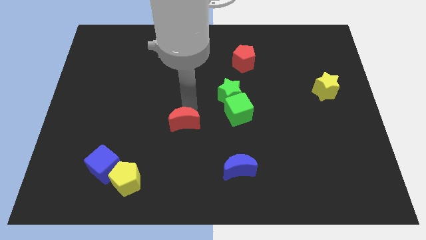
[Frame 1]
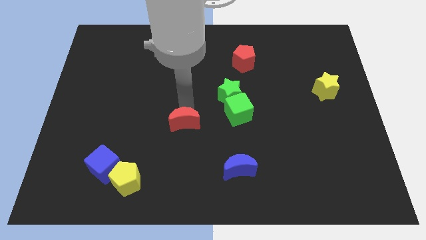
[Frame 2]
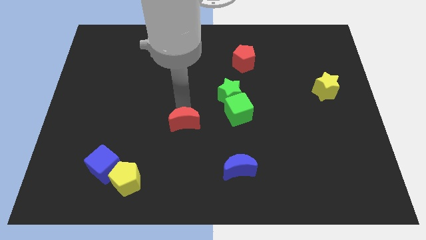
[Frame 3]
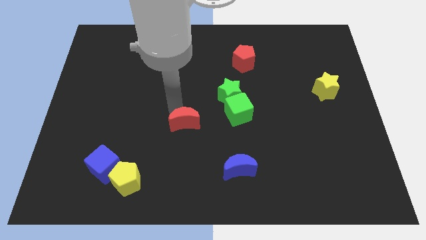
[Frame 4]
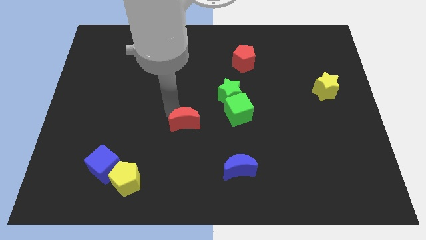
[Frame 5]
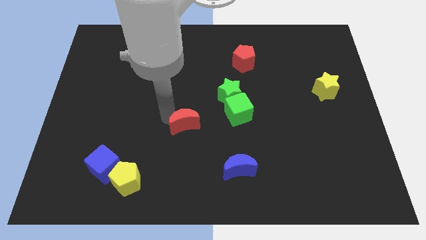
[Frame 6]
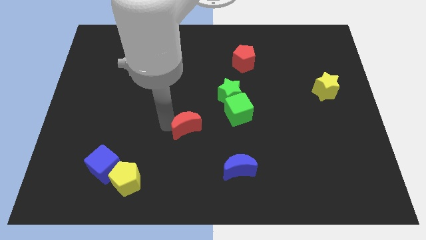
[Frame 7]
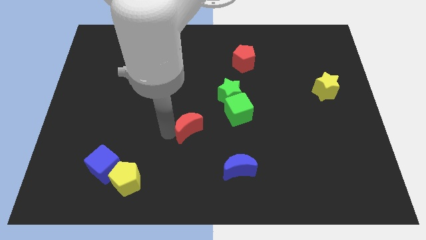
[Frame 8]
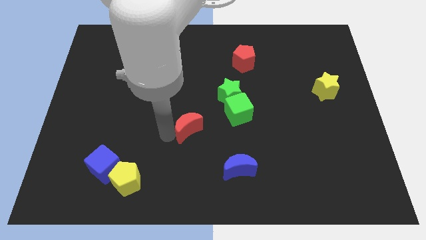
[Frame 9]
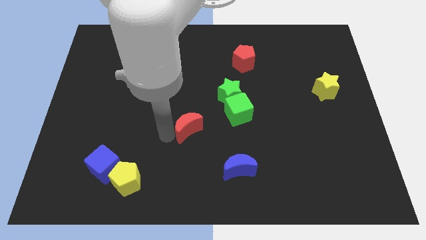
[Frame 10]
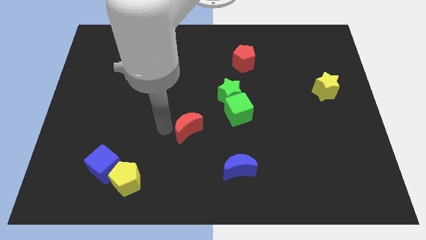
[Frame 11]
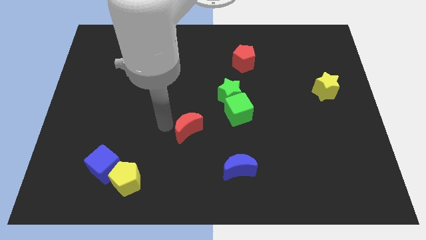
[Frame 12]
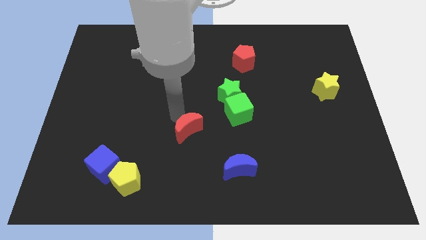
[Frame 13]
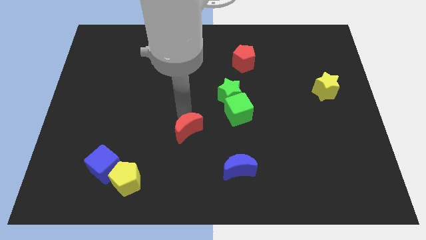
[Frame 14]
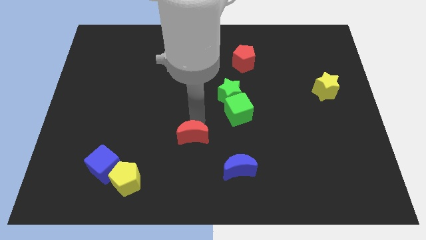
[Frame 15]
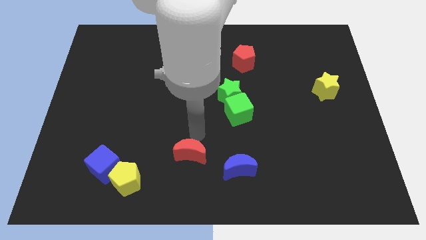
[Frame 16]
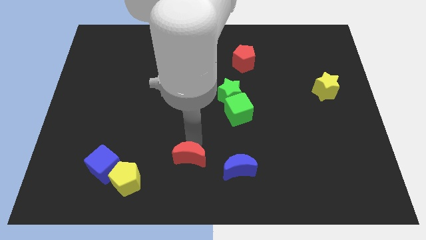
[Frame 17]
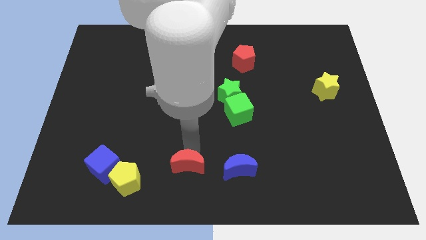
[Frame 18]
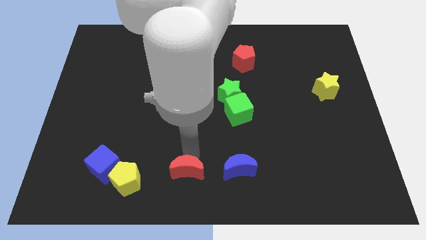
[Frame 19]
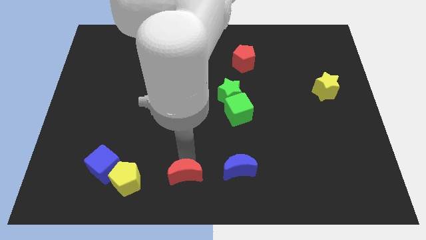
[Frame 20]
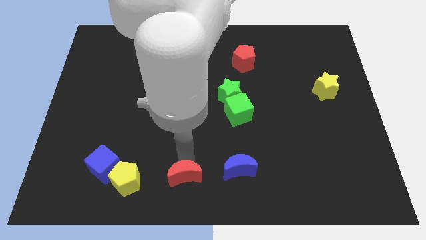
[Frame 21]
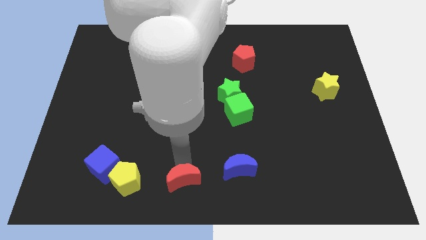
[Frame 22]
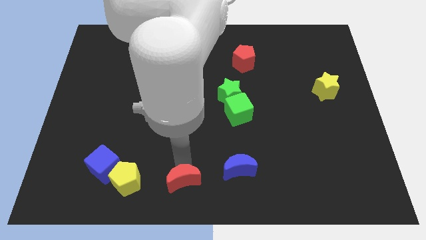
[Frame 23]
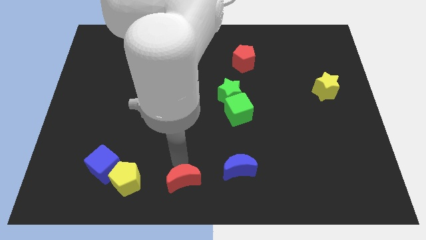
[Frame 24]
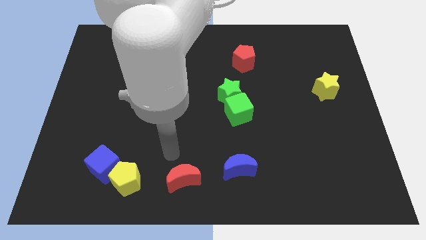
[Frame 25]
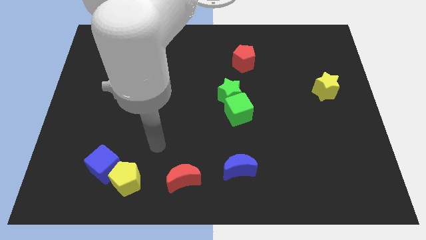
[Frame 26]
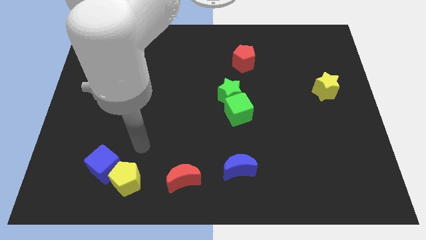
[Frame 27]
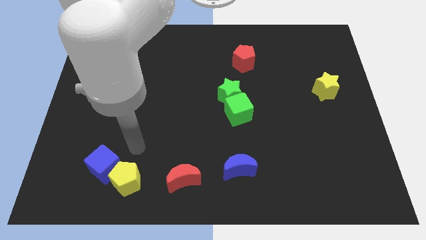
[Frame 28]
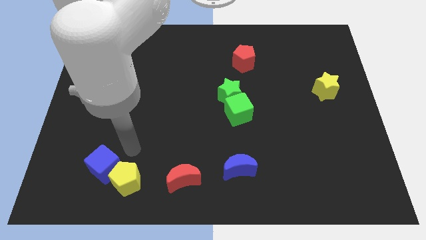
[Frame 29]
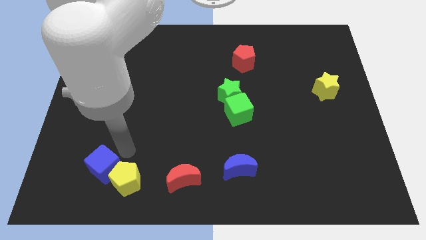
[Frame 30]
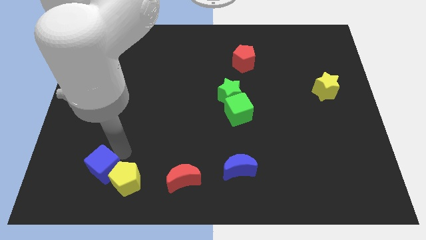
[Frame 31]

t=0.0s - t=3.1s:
move red moon towards bottom center

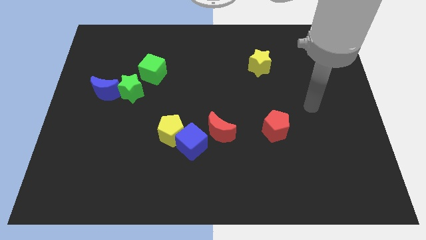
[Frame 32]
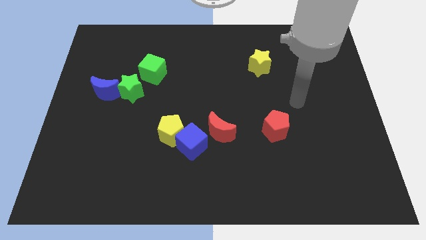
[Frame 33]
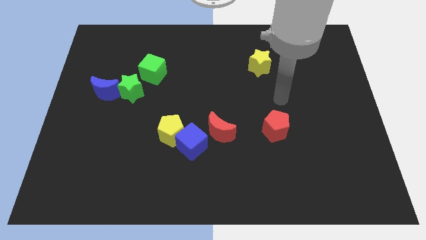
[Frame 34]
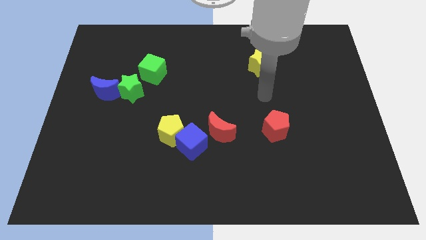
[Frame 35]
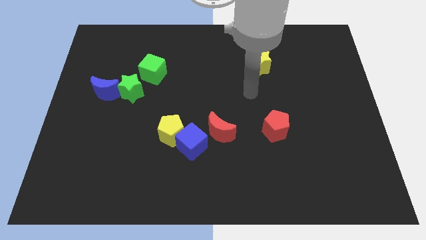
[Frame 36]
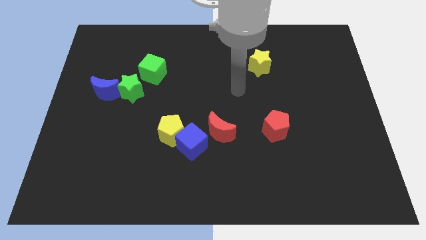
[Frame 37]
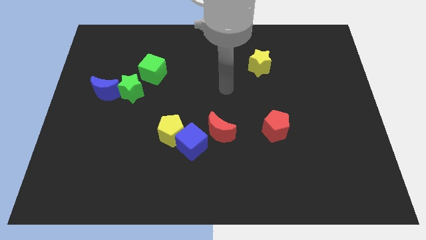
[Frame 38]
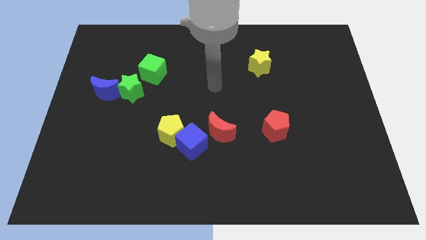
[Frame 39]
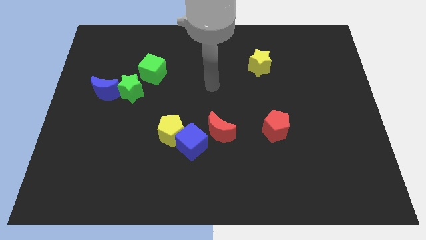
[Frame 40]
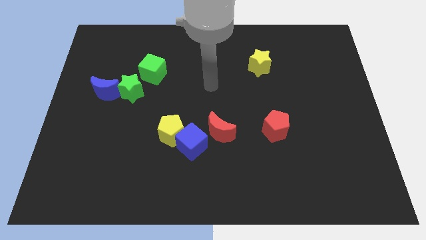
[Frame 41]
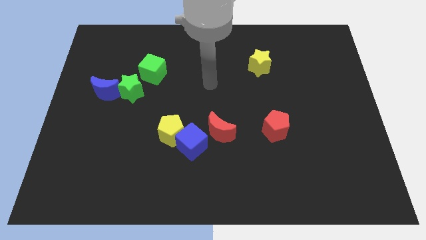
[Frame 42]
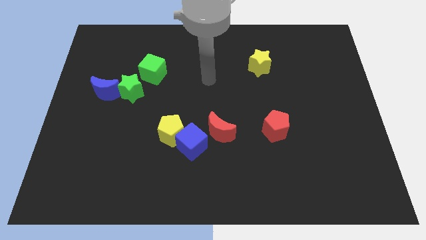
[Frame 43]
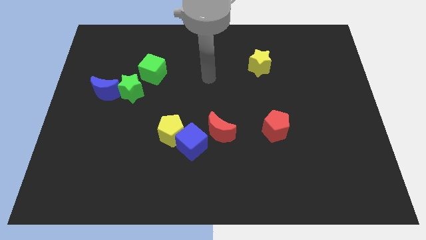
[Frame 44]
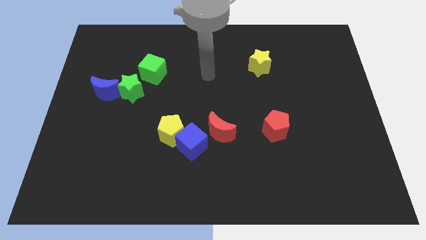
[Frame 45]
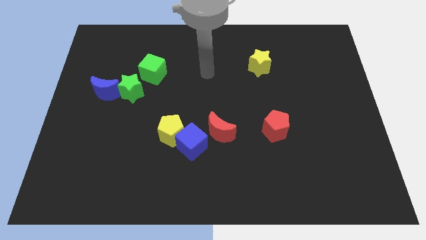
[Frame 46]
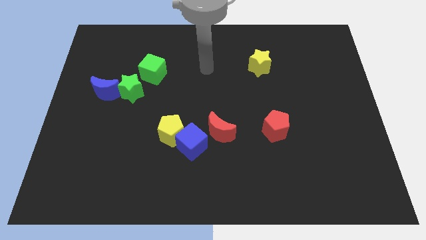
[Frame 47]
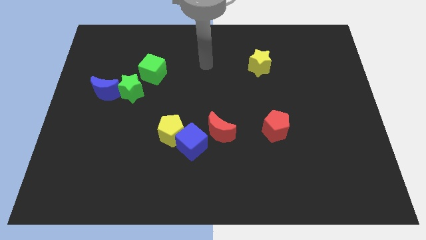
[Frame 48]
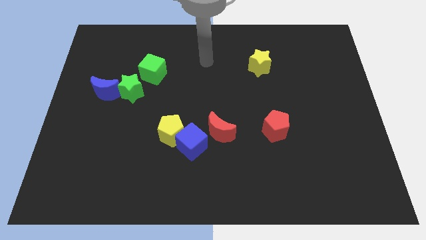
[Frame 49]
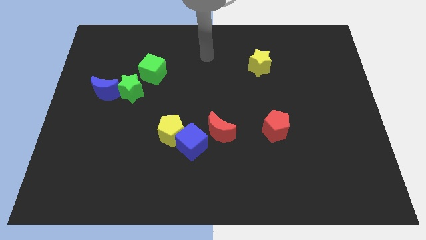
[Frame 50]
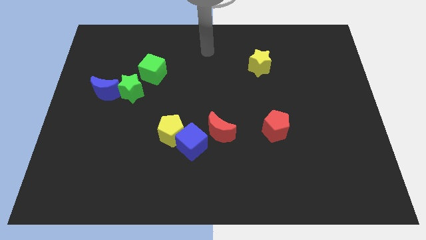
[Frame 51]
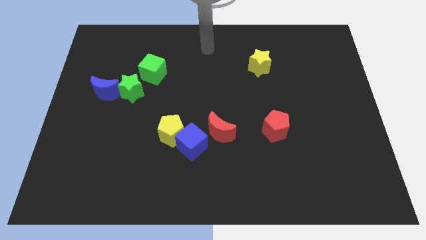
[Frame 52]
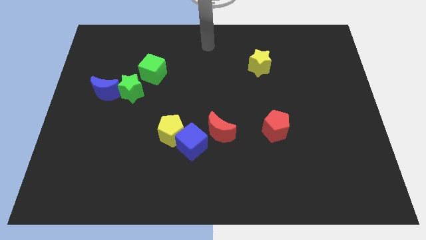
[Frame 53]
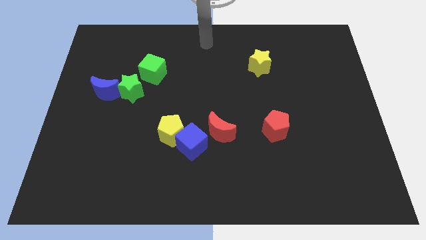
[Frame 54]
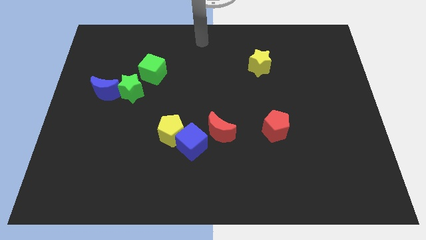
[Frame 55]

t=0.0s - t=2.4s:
point your arm at the top center of the board

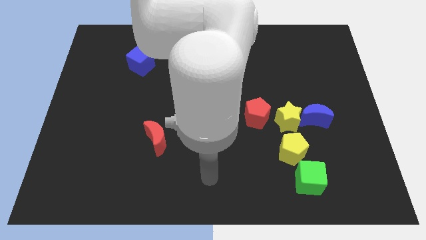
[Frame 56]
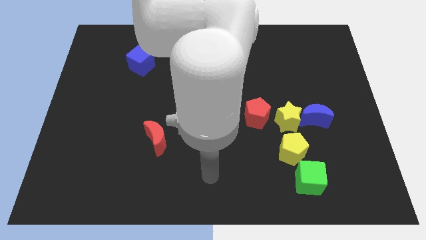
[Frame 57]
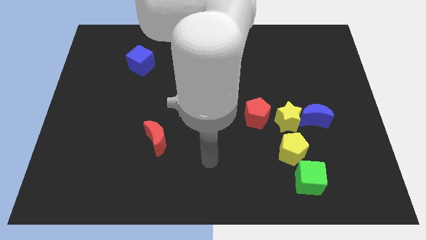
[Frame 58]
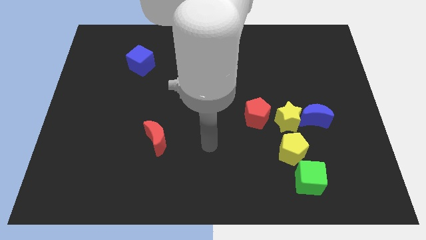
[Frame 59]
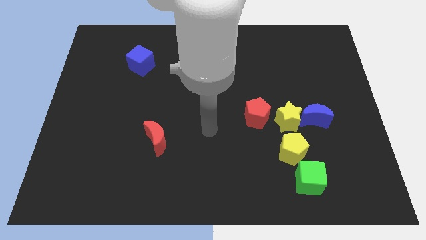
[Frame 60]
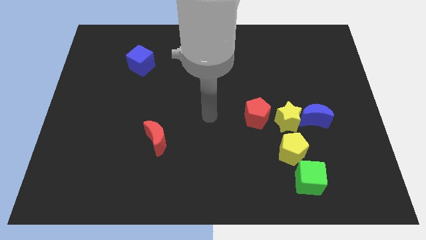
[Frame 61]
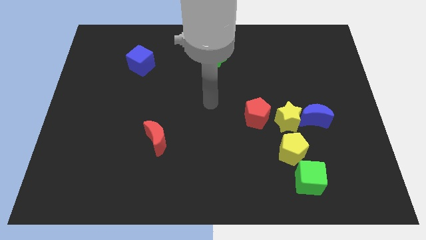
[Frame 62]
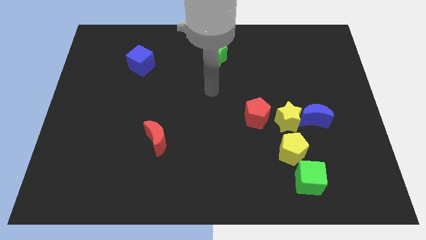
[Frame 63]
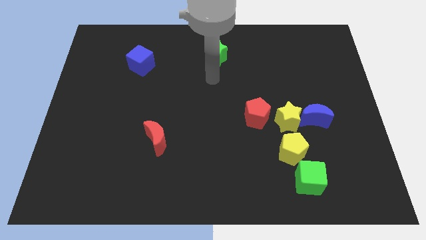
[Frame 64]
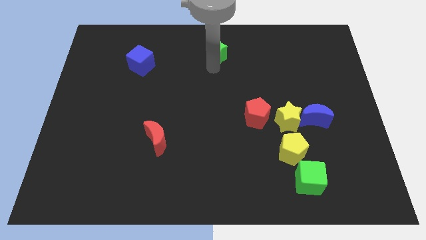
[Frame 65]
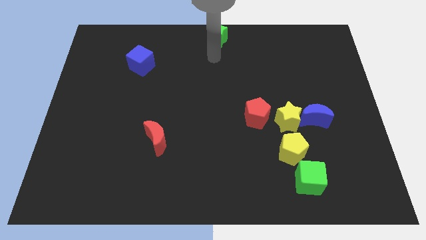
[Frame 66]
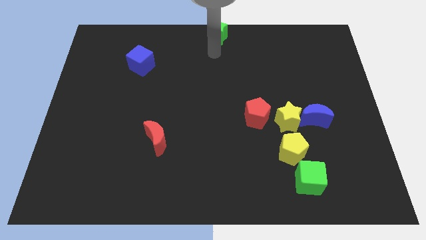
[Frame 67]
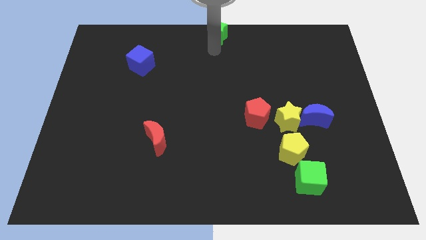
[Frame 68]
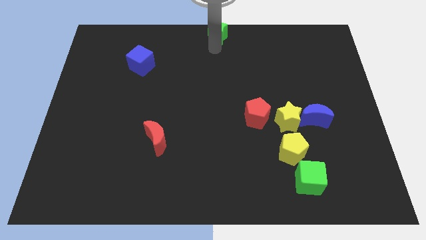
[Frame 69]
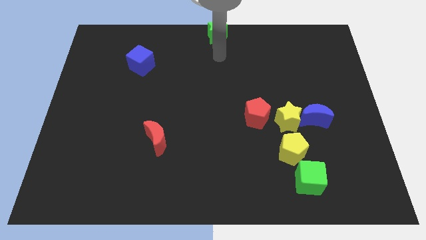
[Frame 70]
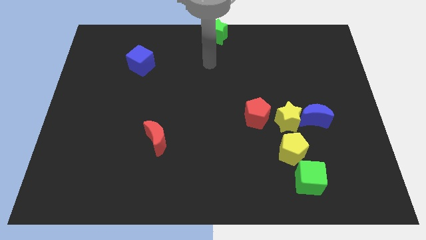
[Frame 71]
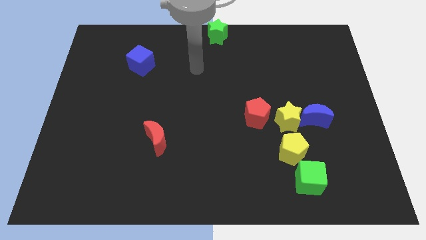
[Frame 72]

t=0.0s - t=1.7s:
place the green star at the top center of the board

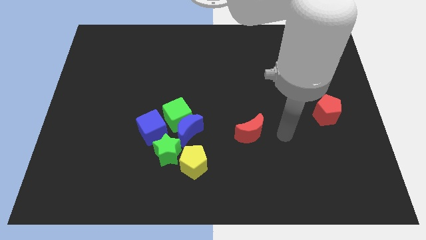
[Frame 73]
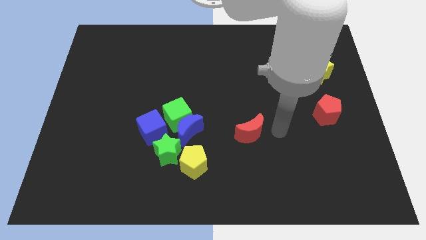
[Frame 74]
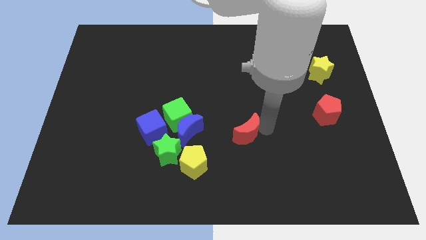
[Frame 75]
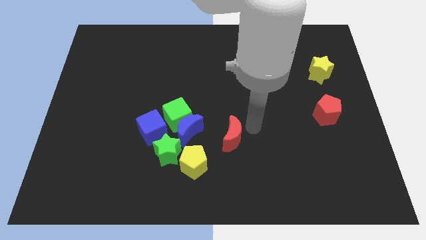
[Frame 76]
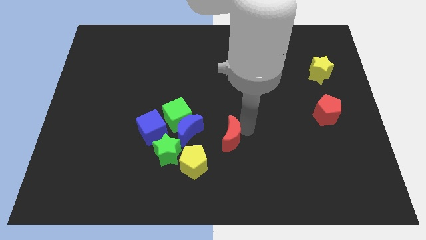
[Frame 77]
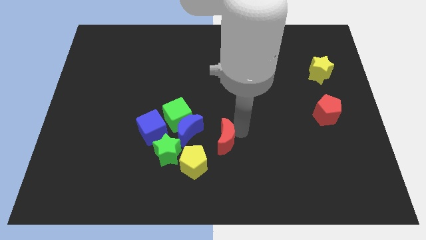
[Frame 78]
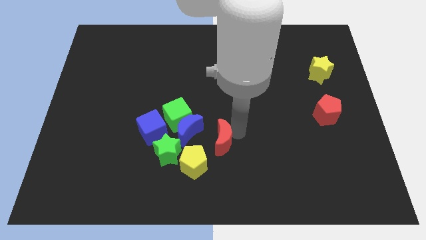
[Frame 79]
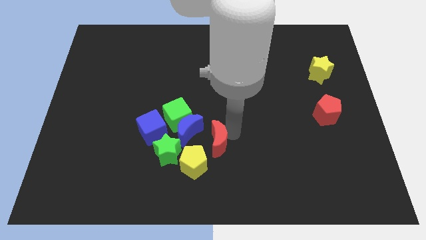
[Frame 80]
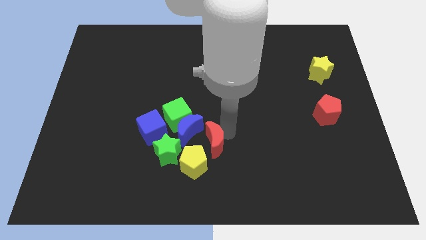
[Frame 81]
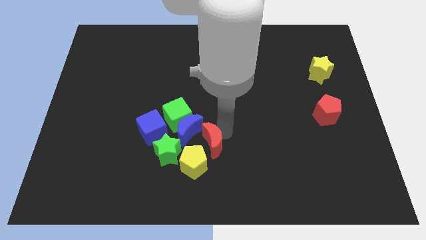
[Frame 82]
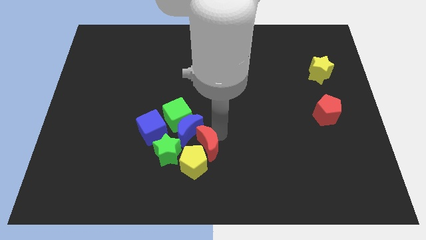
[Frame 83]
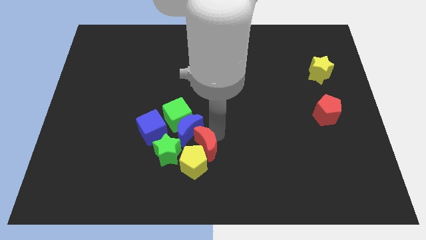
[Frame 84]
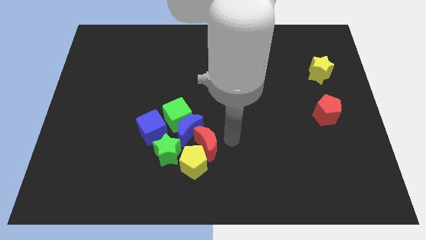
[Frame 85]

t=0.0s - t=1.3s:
push the red crescent to the bottom of blue crescent

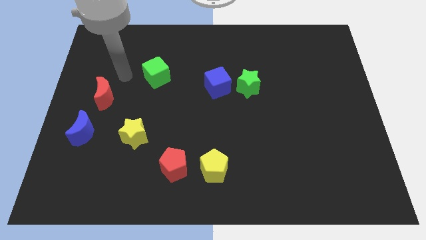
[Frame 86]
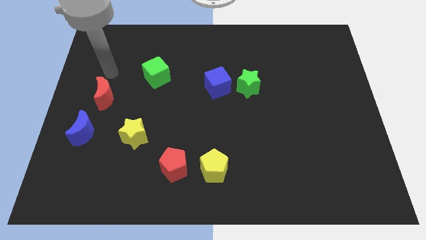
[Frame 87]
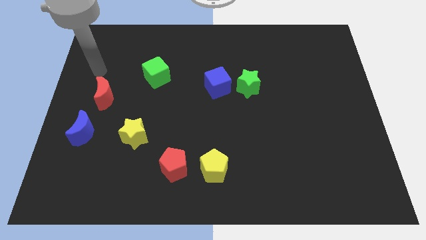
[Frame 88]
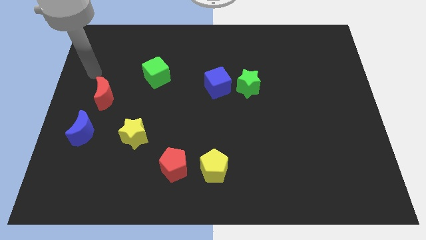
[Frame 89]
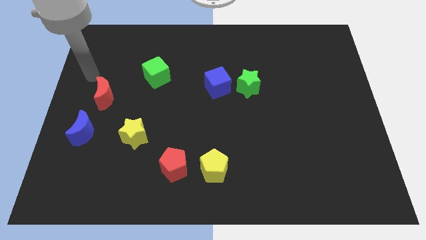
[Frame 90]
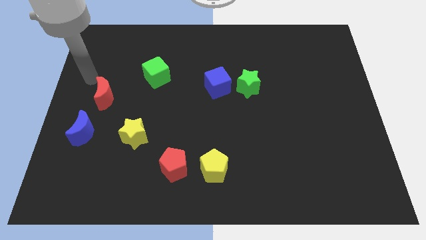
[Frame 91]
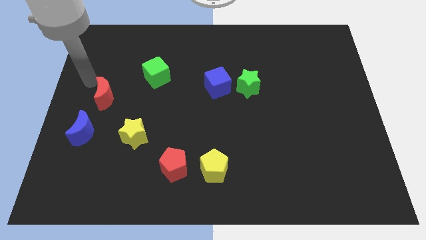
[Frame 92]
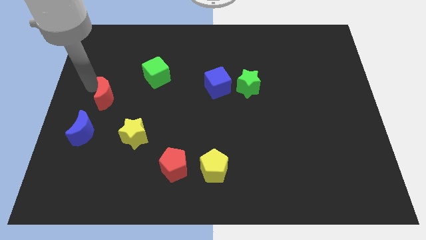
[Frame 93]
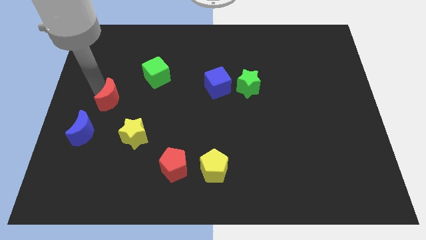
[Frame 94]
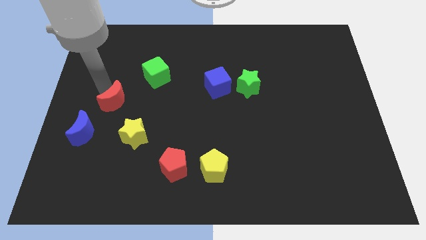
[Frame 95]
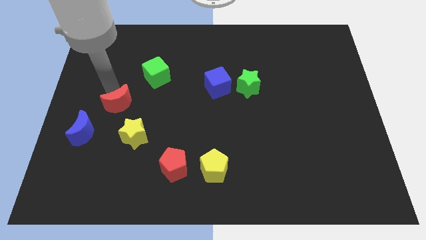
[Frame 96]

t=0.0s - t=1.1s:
push red moon towards yellow star
